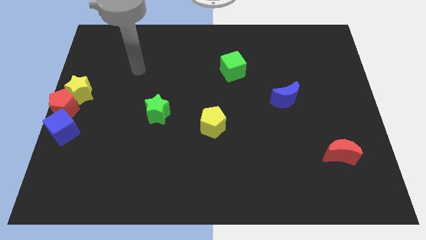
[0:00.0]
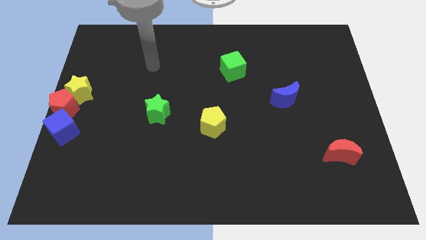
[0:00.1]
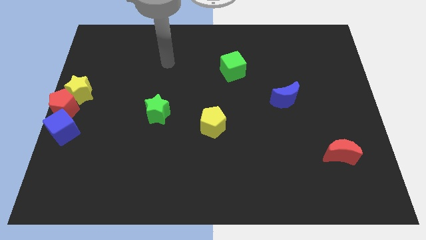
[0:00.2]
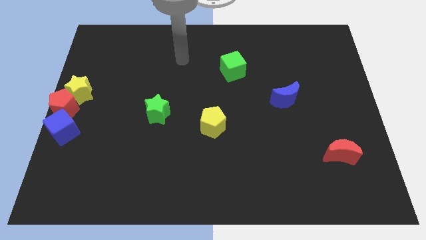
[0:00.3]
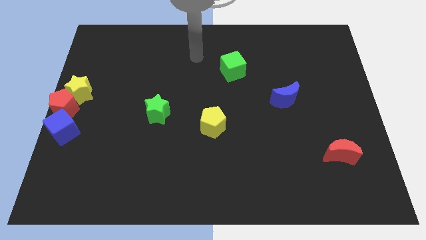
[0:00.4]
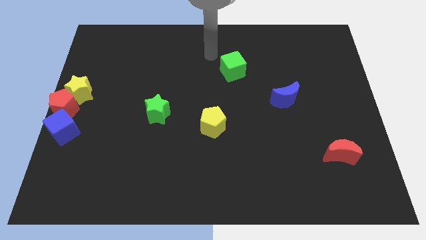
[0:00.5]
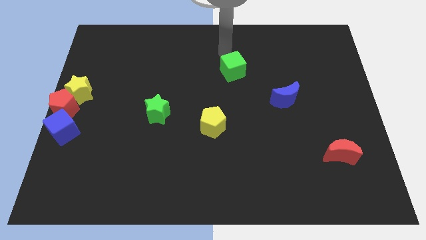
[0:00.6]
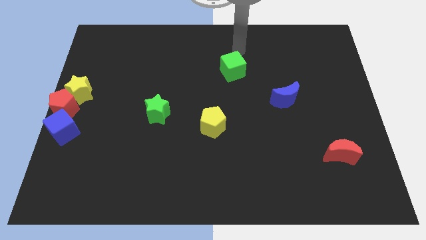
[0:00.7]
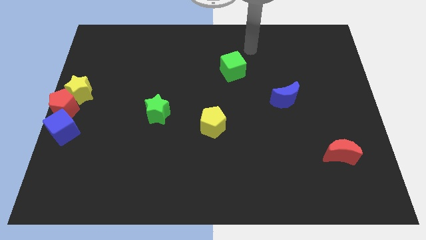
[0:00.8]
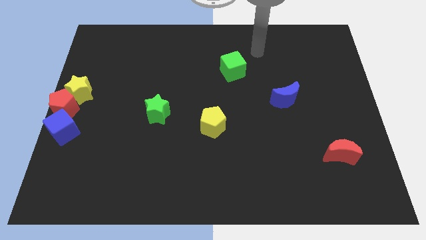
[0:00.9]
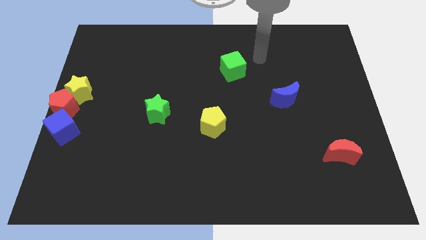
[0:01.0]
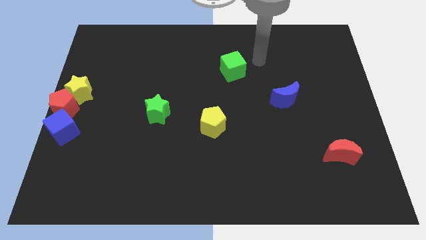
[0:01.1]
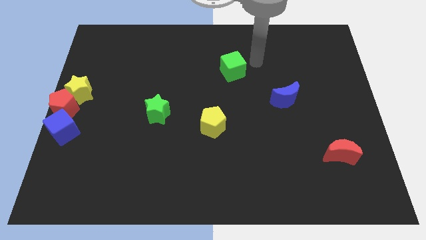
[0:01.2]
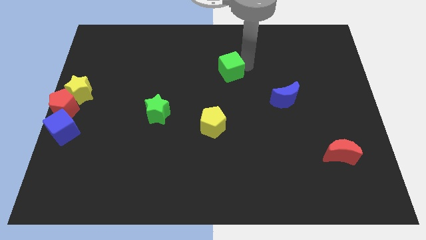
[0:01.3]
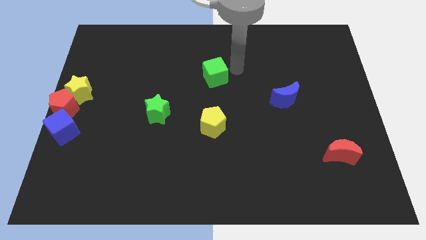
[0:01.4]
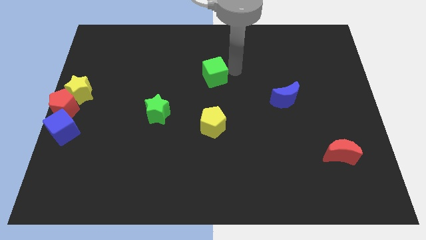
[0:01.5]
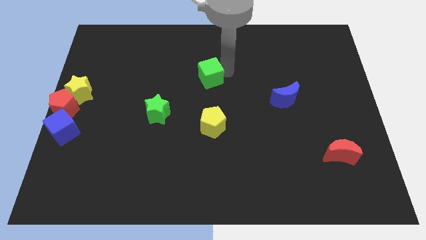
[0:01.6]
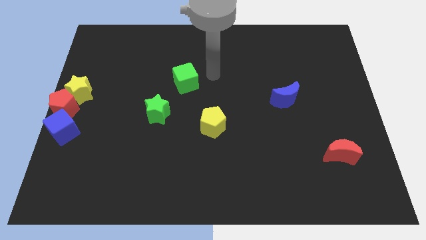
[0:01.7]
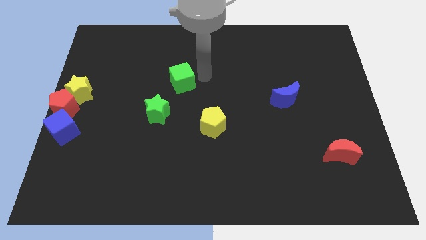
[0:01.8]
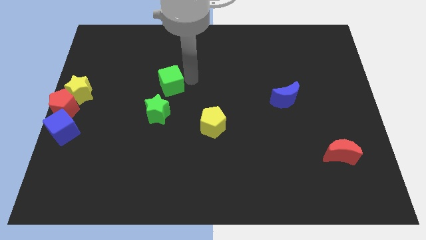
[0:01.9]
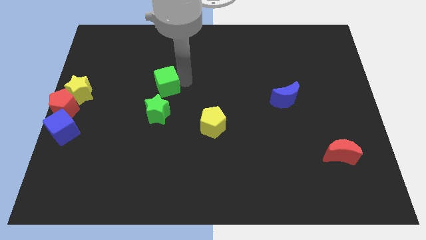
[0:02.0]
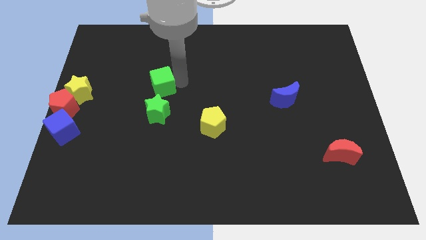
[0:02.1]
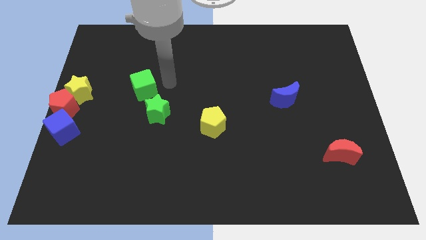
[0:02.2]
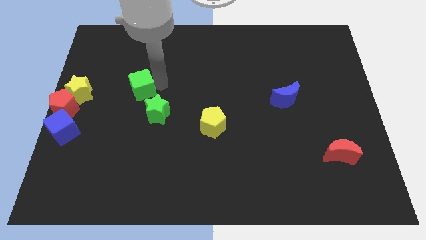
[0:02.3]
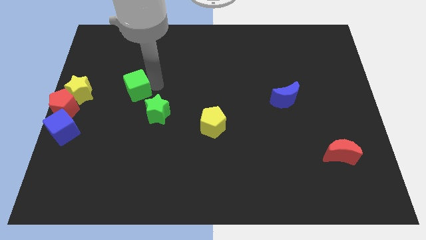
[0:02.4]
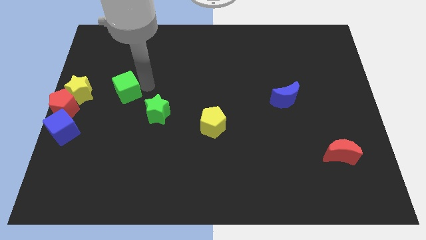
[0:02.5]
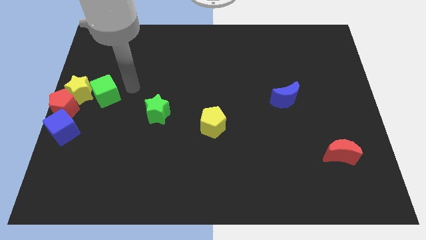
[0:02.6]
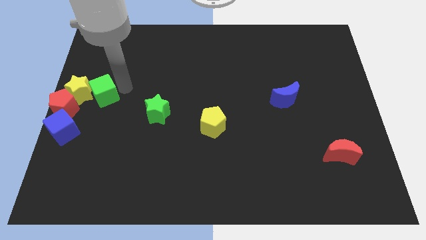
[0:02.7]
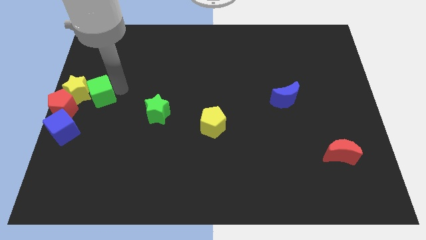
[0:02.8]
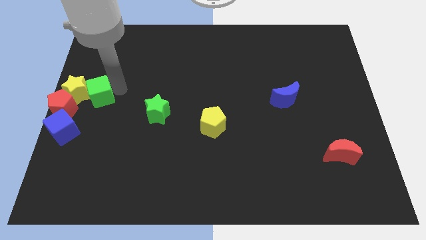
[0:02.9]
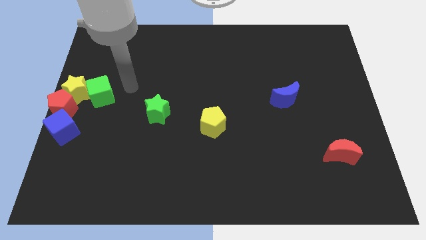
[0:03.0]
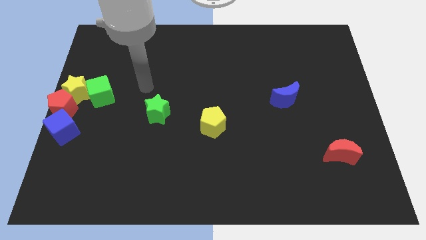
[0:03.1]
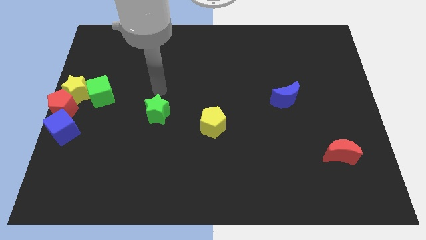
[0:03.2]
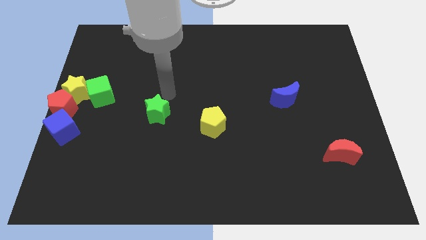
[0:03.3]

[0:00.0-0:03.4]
push the green cube into the yellow star

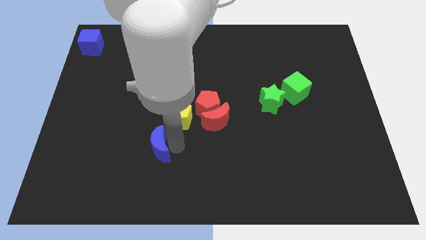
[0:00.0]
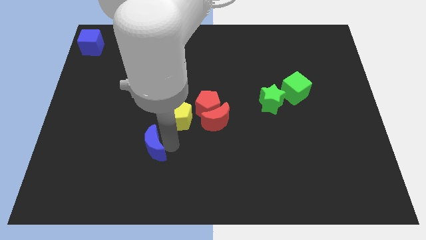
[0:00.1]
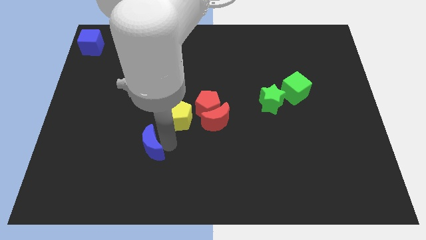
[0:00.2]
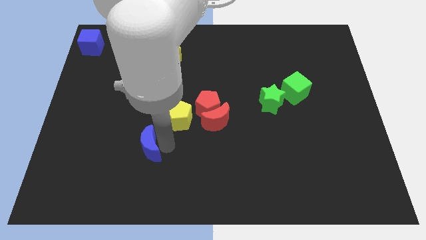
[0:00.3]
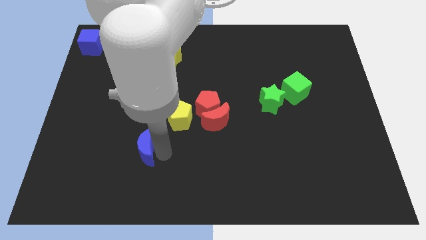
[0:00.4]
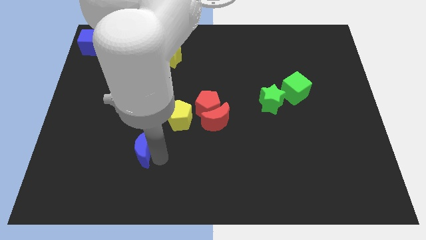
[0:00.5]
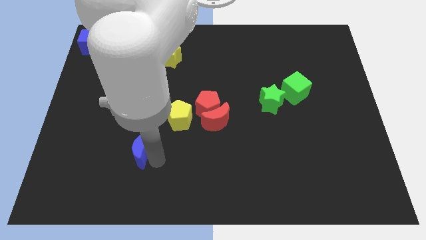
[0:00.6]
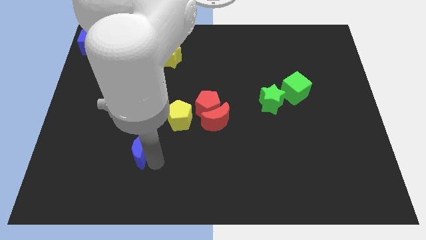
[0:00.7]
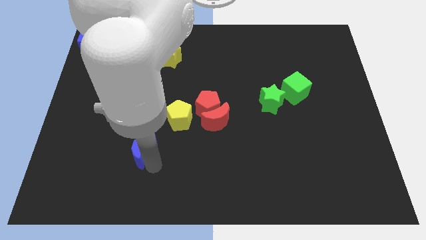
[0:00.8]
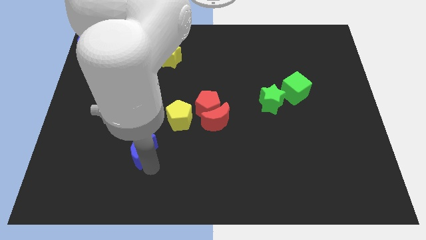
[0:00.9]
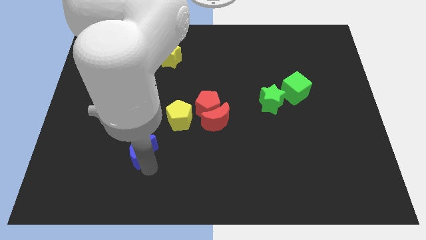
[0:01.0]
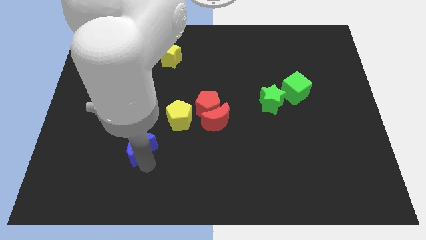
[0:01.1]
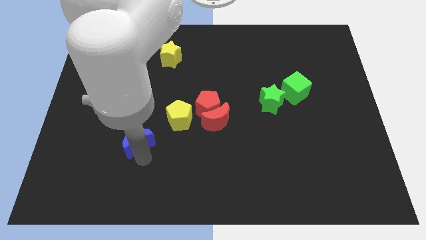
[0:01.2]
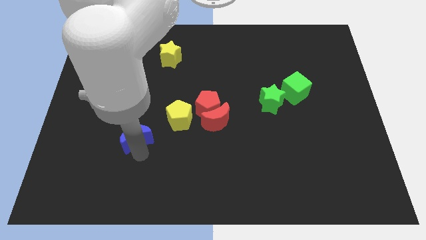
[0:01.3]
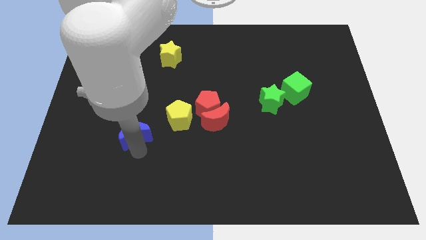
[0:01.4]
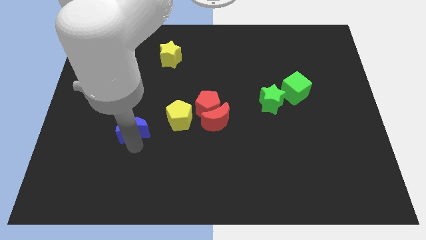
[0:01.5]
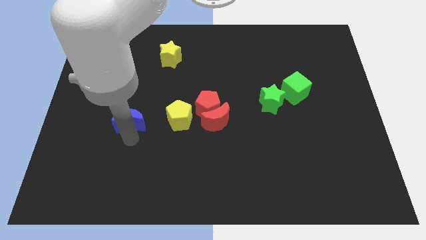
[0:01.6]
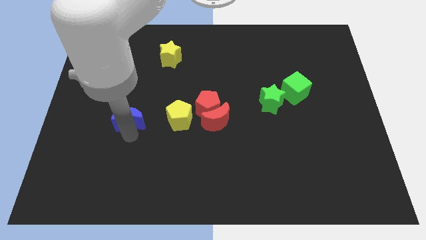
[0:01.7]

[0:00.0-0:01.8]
move the blue moon to the left of yellow pentagon

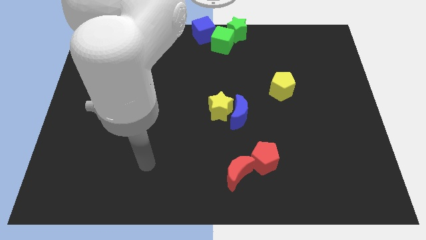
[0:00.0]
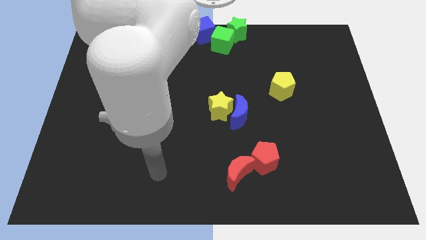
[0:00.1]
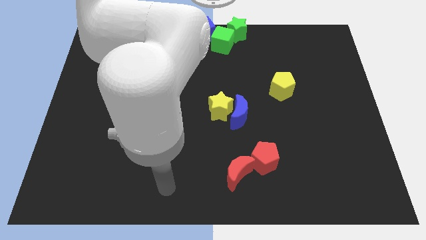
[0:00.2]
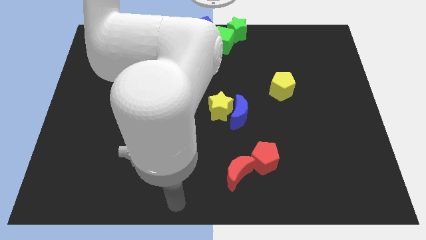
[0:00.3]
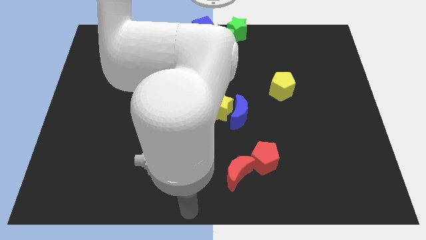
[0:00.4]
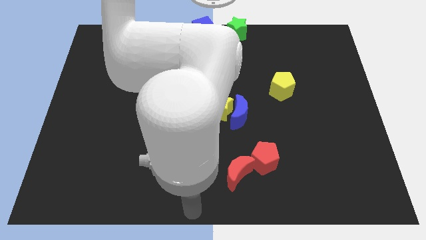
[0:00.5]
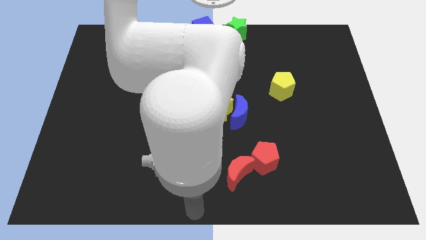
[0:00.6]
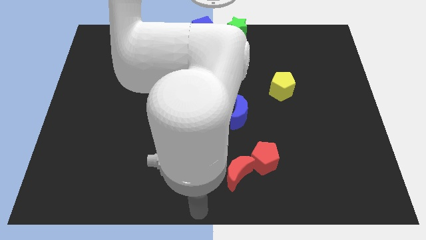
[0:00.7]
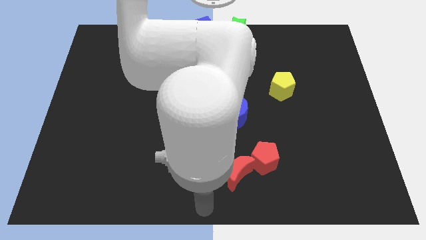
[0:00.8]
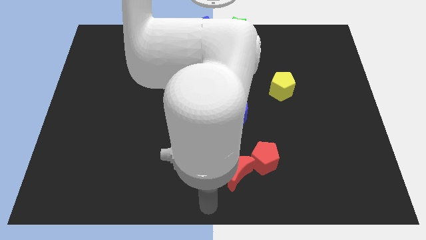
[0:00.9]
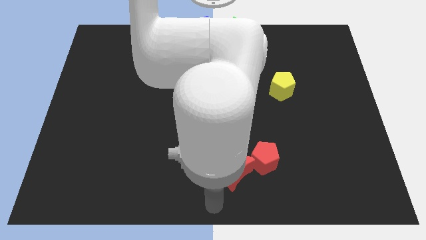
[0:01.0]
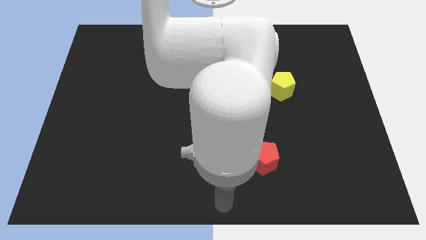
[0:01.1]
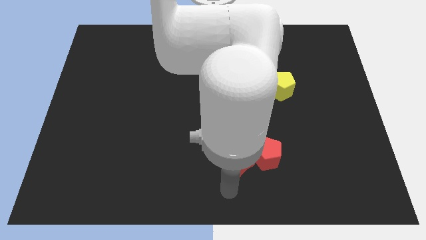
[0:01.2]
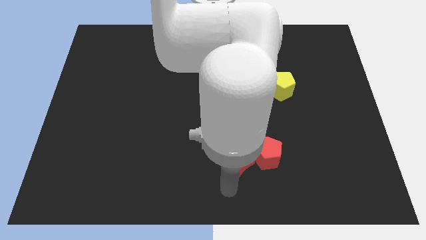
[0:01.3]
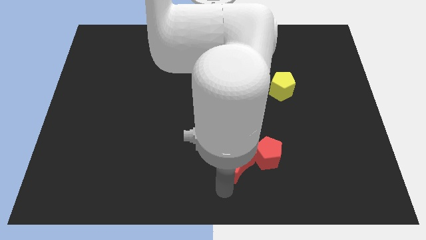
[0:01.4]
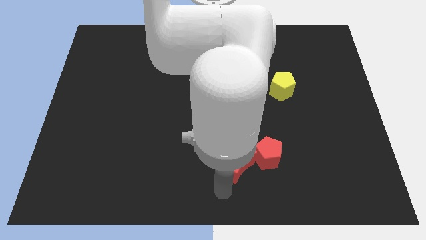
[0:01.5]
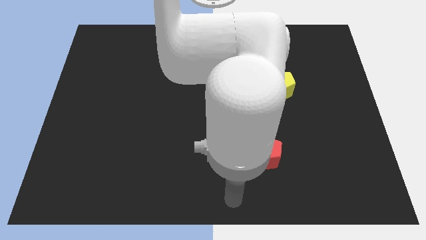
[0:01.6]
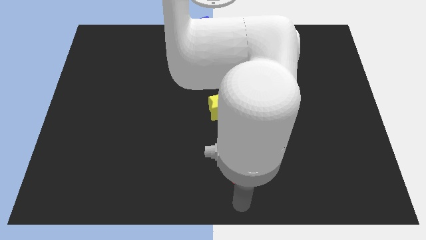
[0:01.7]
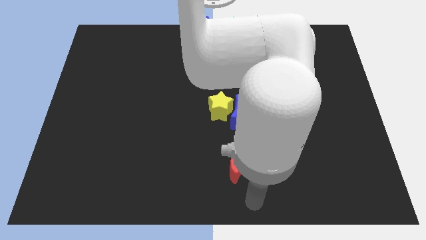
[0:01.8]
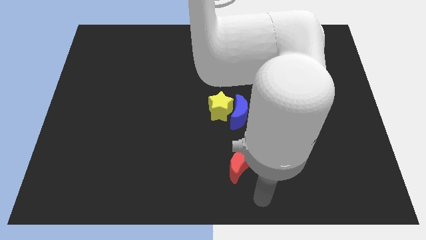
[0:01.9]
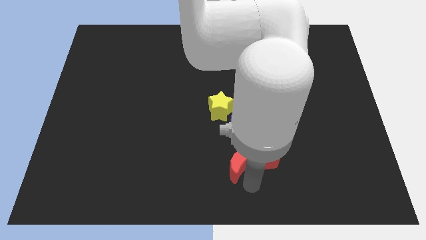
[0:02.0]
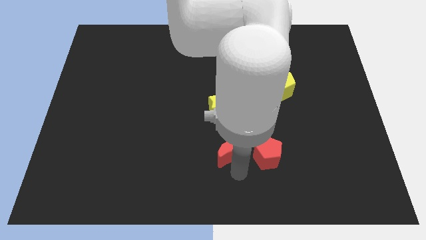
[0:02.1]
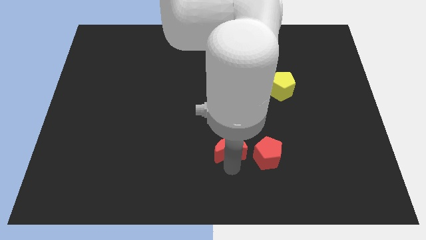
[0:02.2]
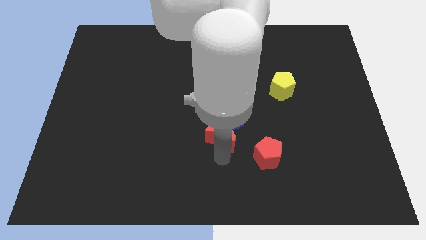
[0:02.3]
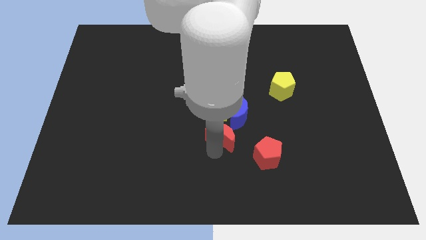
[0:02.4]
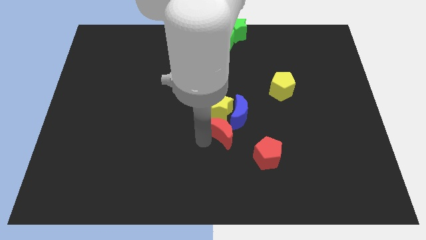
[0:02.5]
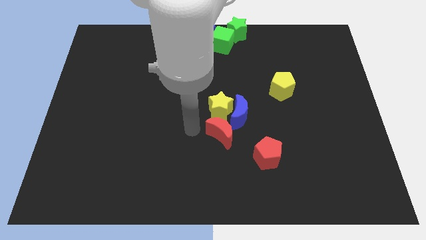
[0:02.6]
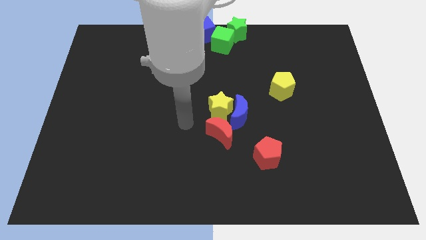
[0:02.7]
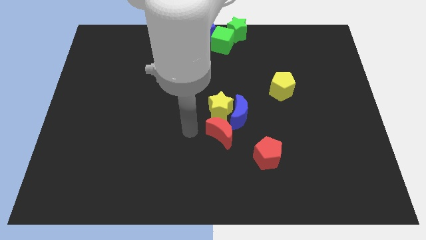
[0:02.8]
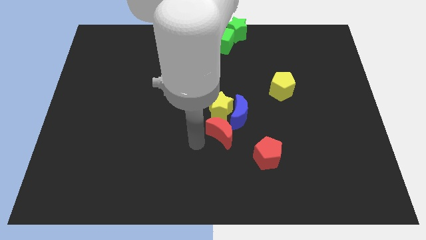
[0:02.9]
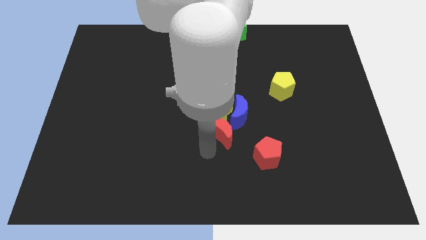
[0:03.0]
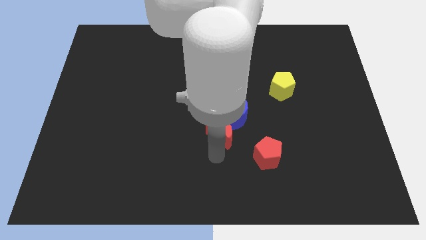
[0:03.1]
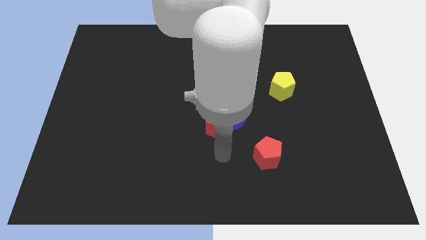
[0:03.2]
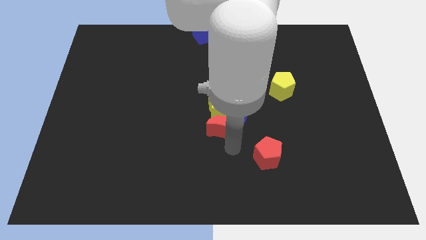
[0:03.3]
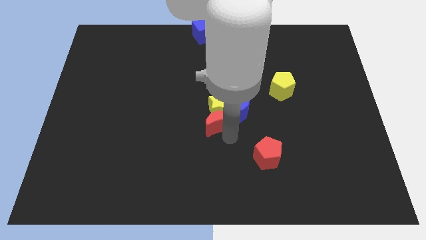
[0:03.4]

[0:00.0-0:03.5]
move the red moon into a yellow star
